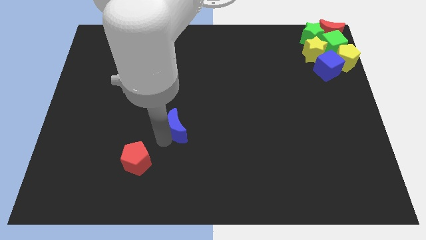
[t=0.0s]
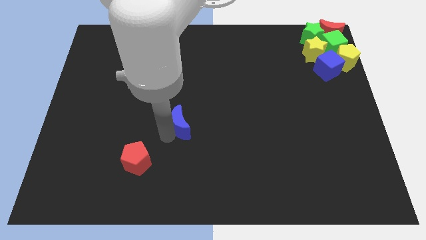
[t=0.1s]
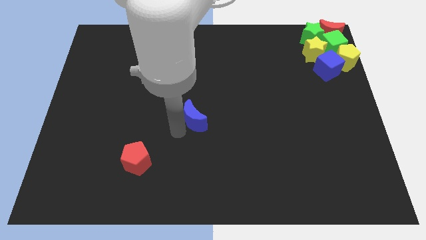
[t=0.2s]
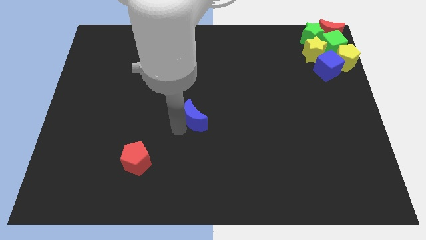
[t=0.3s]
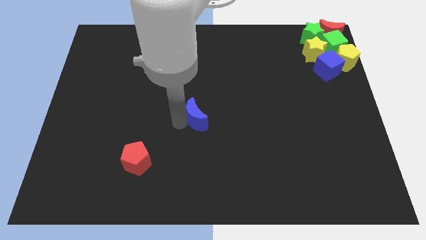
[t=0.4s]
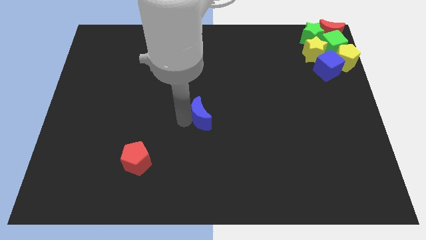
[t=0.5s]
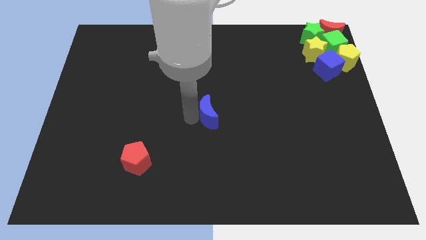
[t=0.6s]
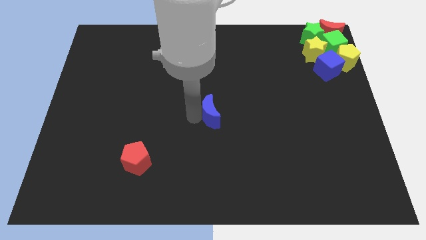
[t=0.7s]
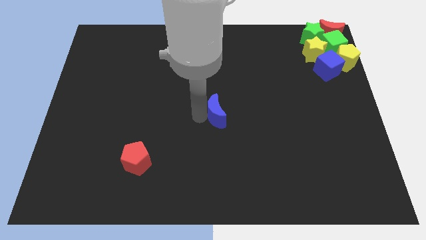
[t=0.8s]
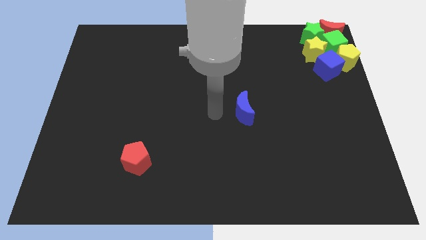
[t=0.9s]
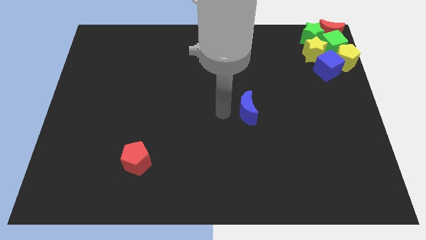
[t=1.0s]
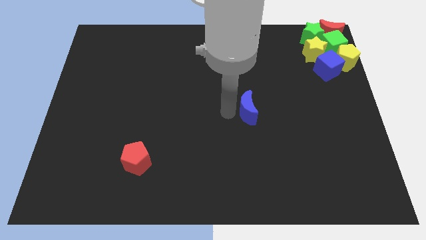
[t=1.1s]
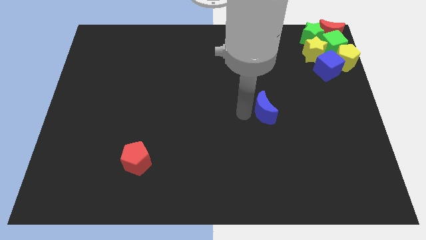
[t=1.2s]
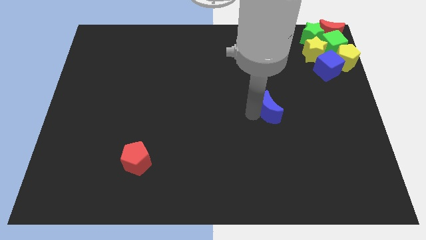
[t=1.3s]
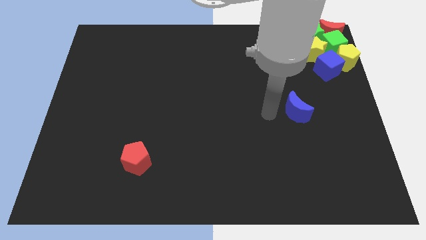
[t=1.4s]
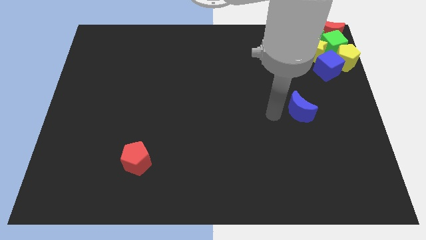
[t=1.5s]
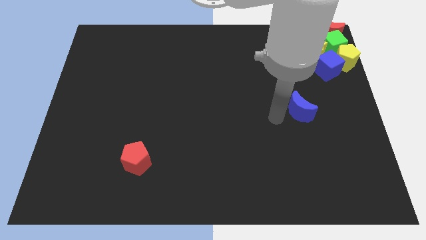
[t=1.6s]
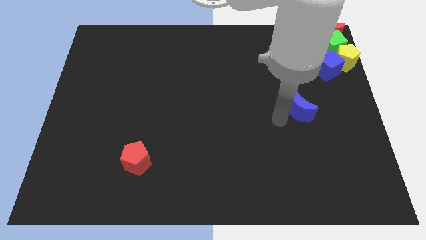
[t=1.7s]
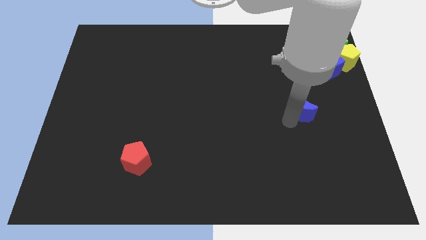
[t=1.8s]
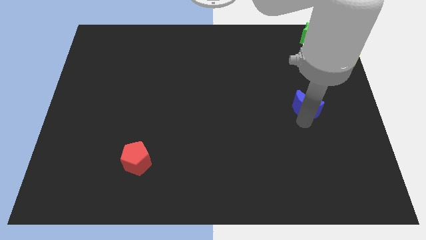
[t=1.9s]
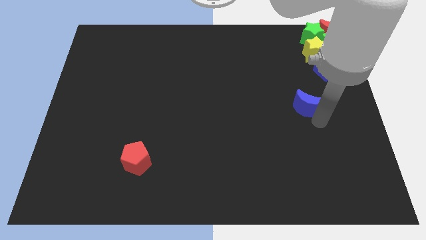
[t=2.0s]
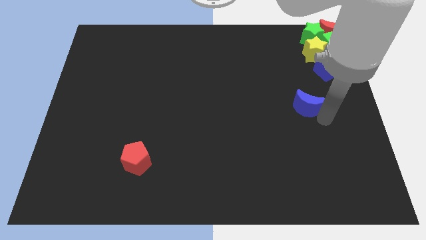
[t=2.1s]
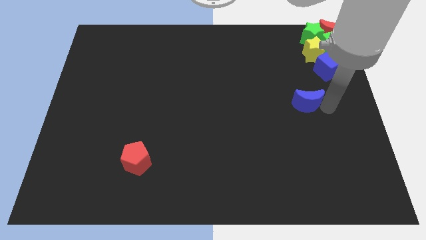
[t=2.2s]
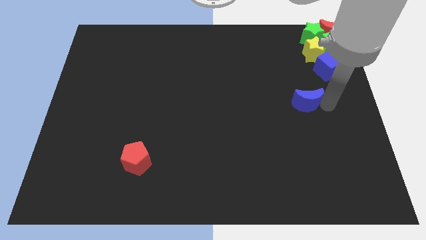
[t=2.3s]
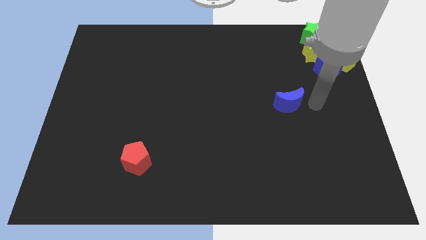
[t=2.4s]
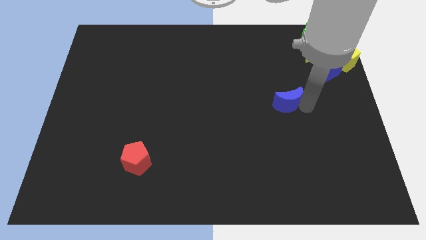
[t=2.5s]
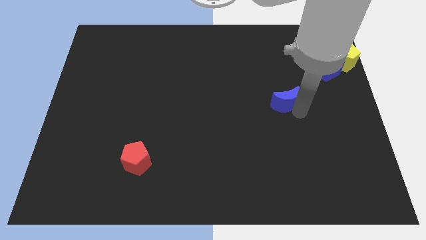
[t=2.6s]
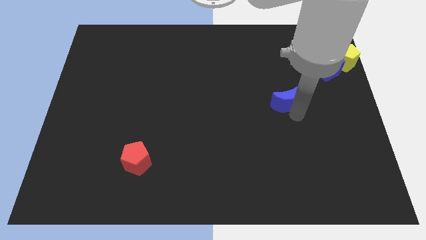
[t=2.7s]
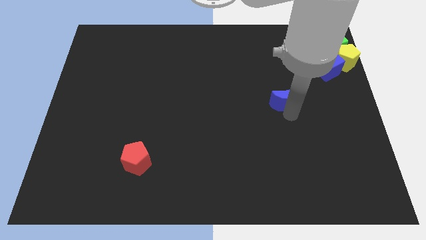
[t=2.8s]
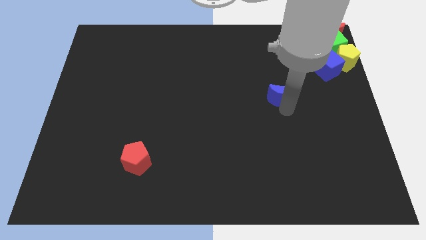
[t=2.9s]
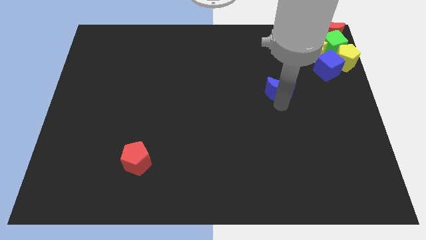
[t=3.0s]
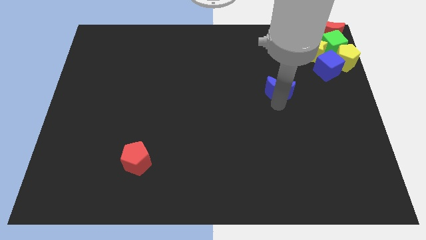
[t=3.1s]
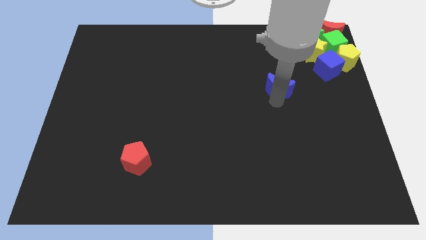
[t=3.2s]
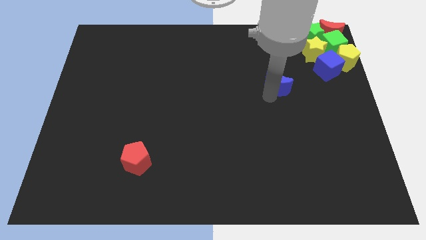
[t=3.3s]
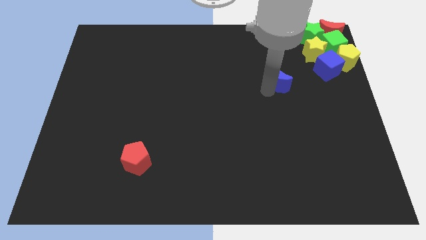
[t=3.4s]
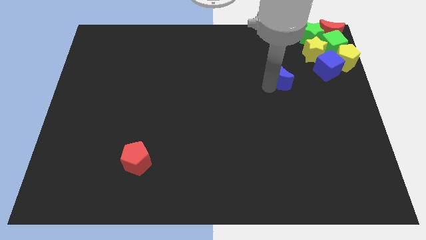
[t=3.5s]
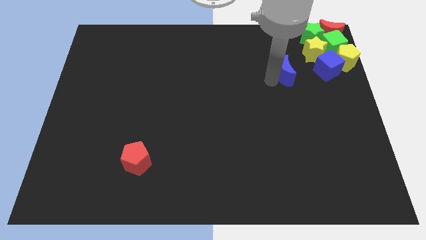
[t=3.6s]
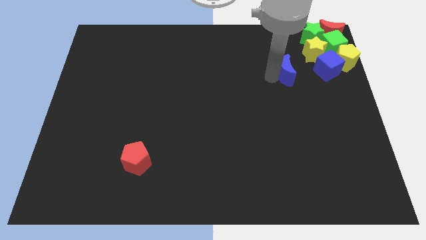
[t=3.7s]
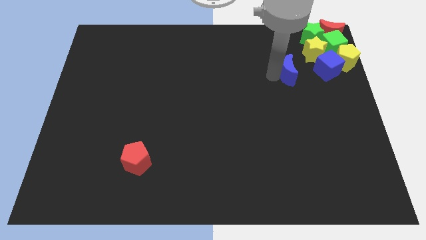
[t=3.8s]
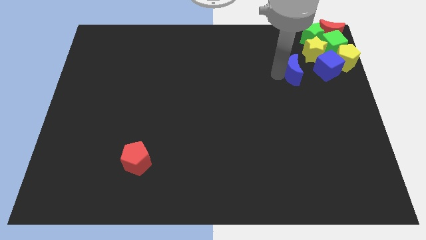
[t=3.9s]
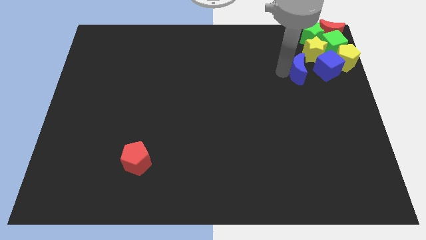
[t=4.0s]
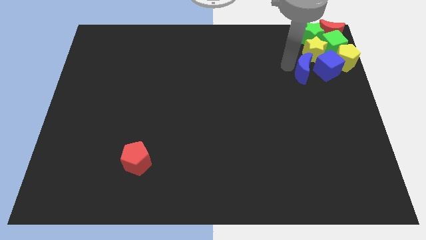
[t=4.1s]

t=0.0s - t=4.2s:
move the blue moon close to the blue cube

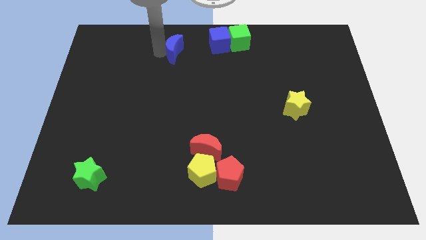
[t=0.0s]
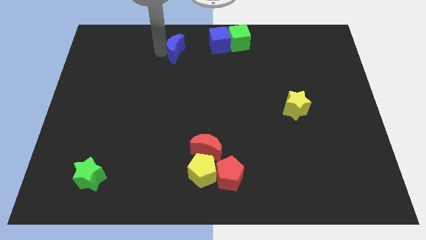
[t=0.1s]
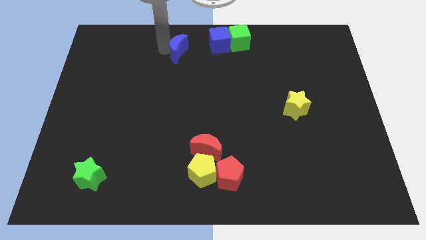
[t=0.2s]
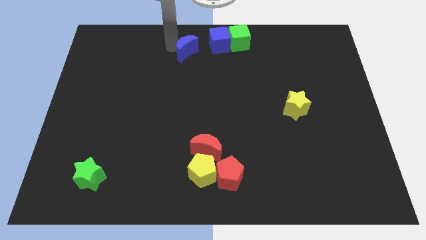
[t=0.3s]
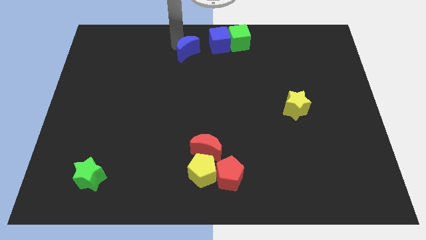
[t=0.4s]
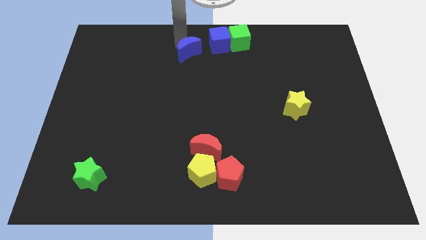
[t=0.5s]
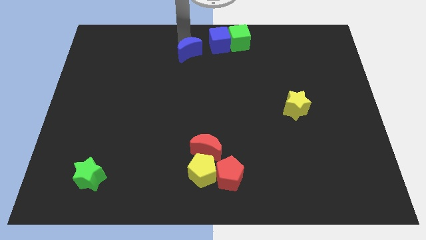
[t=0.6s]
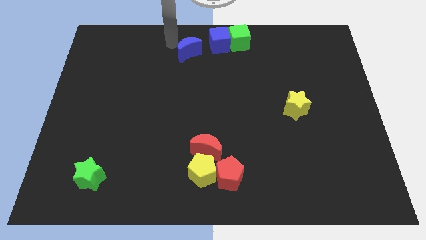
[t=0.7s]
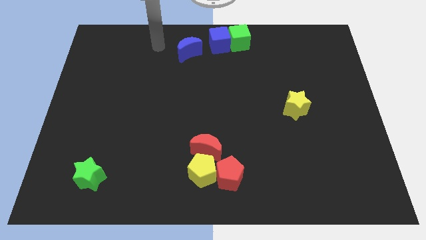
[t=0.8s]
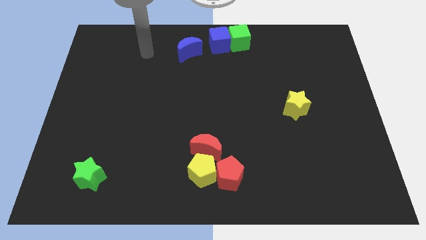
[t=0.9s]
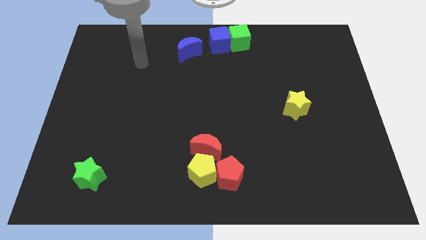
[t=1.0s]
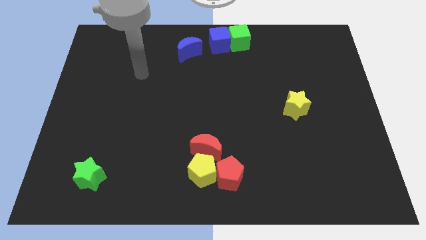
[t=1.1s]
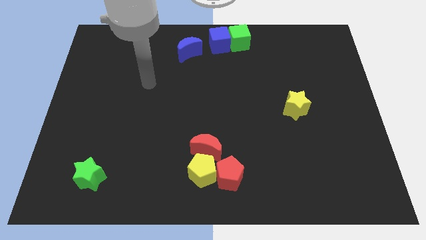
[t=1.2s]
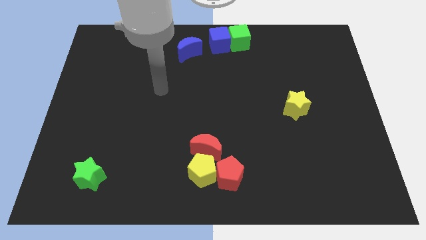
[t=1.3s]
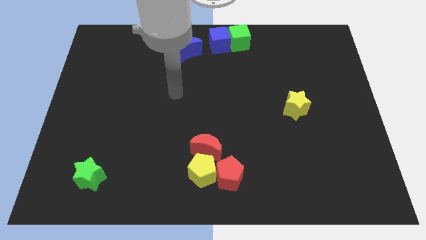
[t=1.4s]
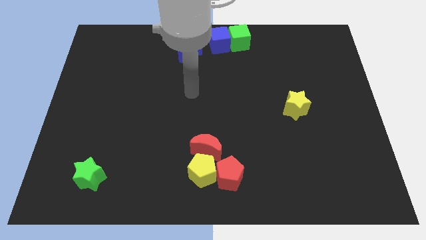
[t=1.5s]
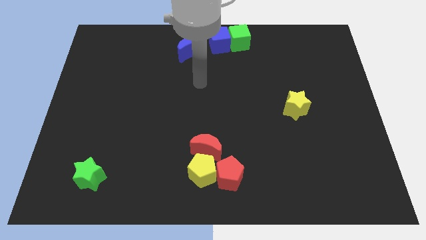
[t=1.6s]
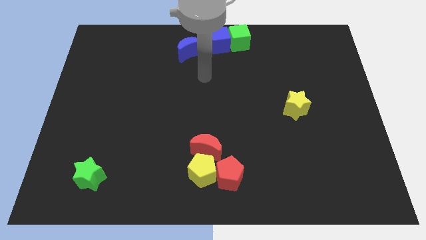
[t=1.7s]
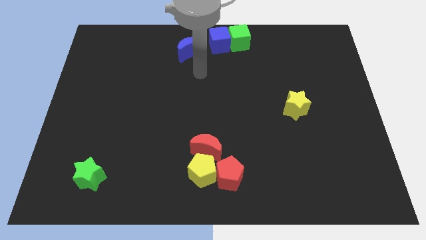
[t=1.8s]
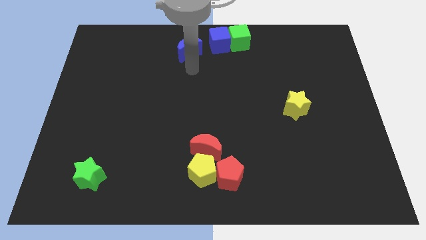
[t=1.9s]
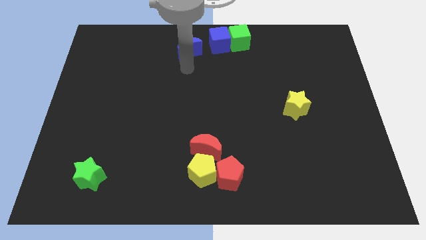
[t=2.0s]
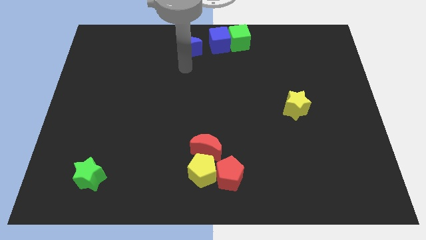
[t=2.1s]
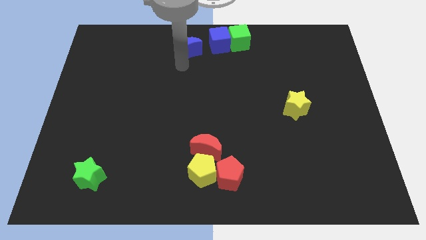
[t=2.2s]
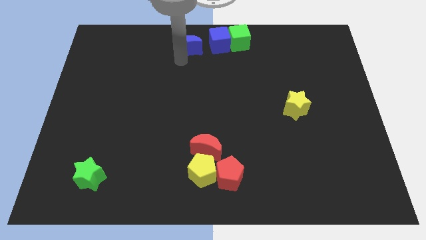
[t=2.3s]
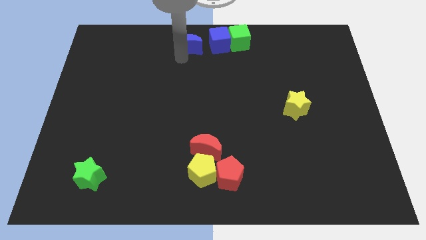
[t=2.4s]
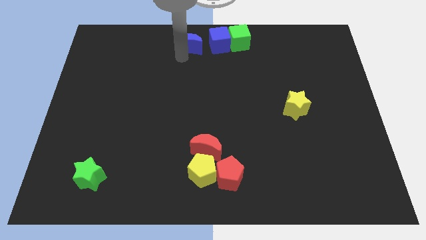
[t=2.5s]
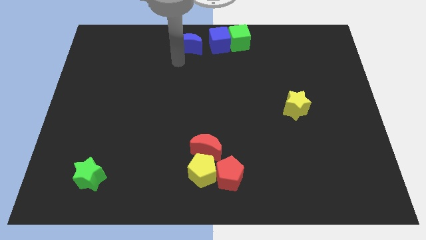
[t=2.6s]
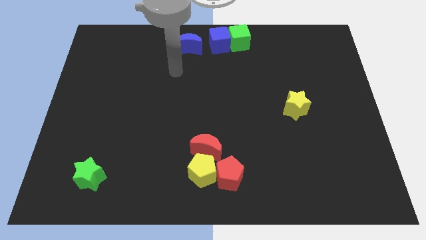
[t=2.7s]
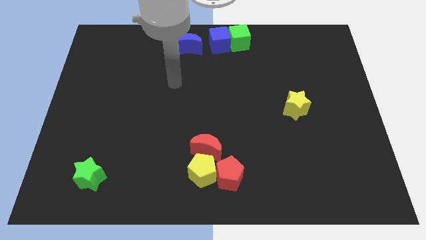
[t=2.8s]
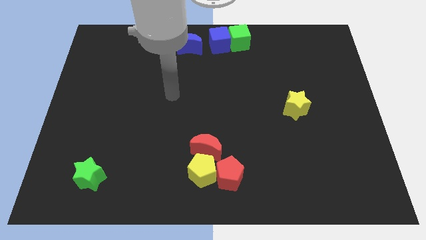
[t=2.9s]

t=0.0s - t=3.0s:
push the blue moon to the left side of the blue cube

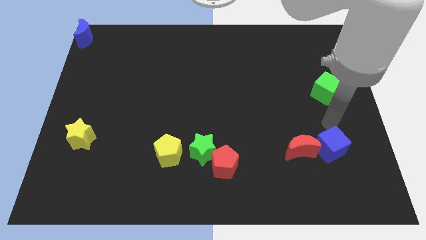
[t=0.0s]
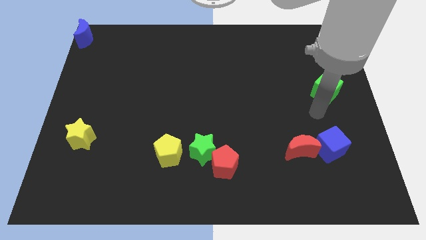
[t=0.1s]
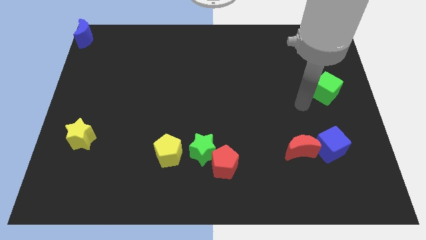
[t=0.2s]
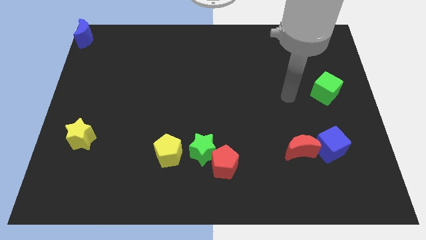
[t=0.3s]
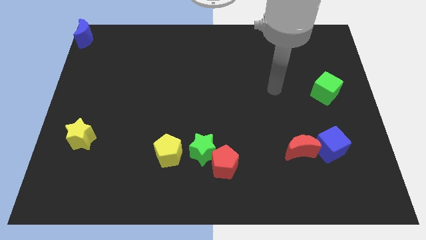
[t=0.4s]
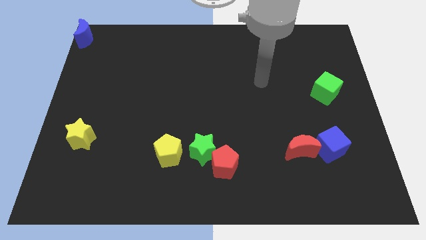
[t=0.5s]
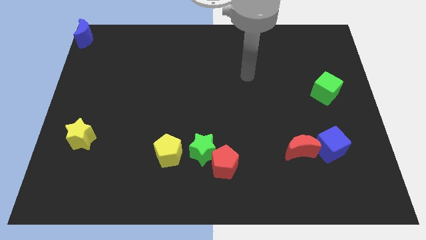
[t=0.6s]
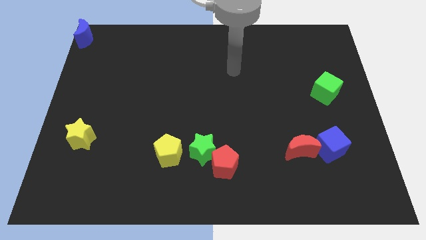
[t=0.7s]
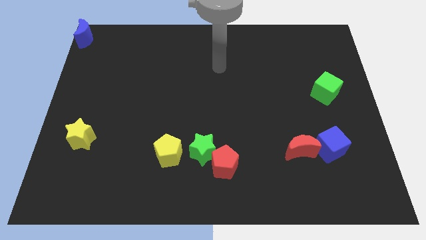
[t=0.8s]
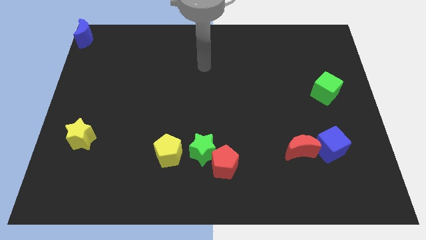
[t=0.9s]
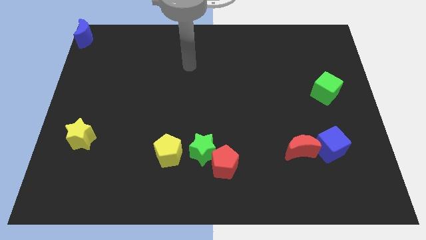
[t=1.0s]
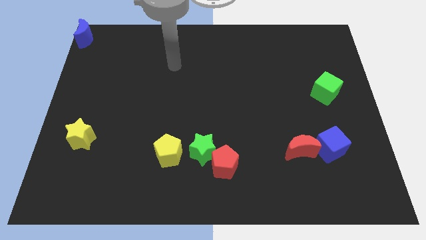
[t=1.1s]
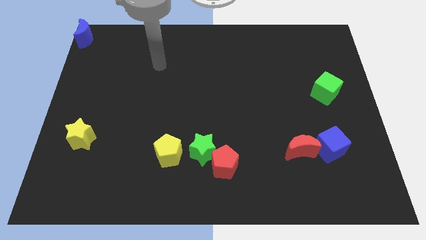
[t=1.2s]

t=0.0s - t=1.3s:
move your arm away from the blue cube

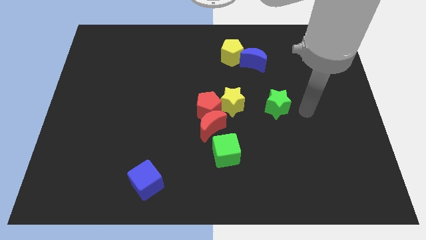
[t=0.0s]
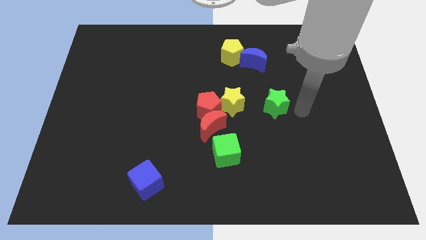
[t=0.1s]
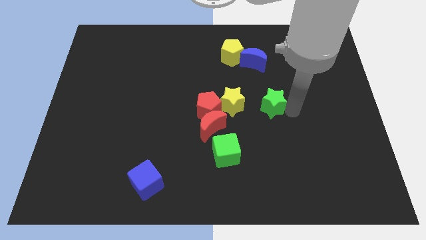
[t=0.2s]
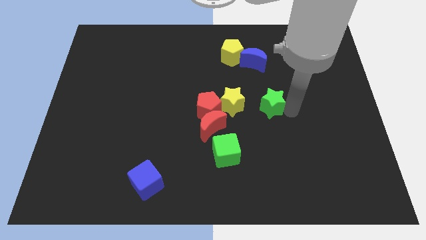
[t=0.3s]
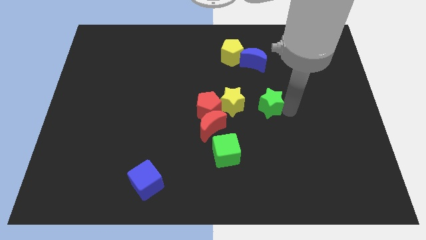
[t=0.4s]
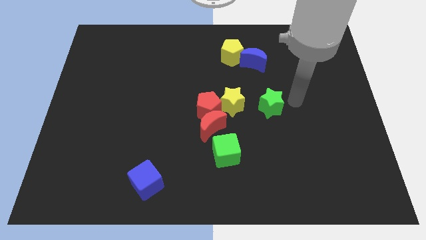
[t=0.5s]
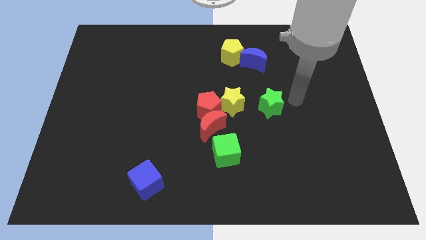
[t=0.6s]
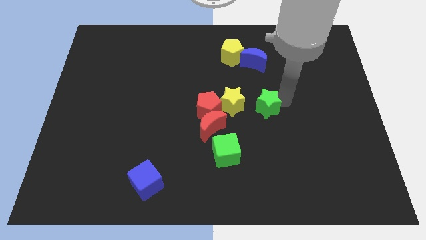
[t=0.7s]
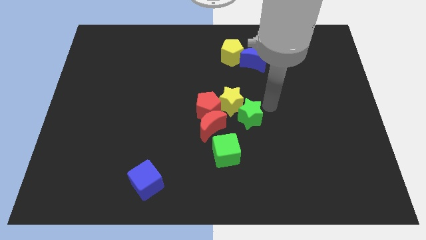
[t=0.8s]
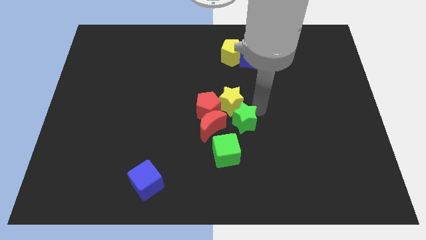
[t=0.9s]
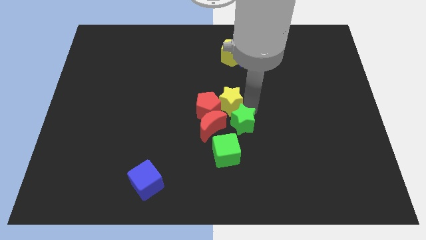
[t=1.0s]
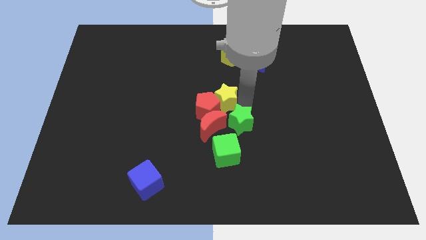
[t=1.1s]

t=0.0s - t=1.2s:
push green star at bottom right to yellow star
